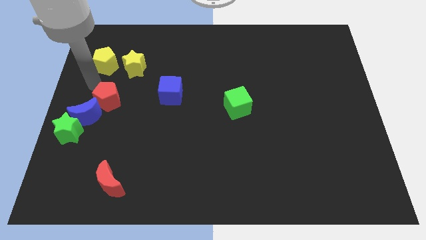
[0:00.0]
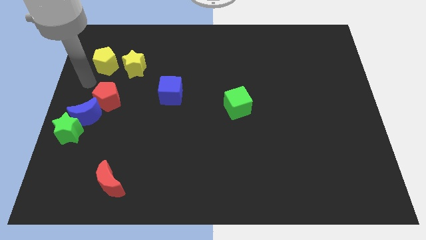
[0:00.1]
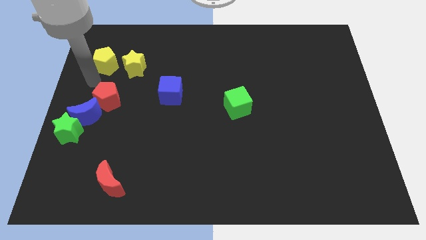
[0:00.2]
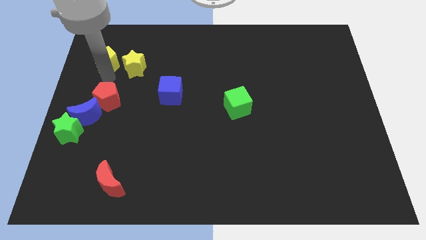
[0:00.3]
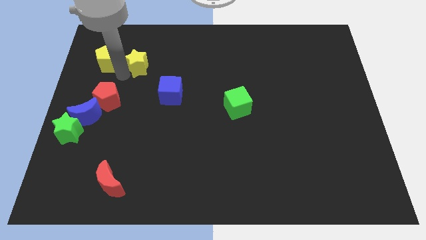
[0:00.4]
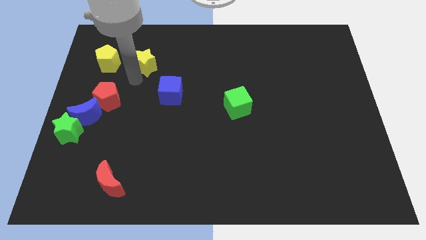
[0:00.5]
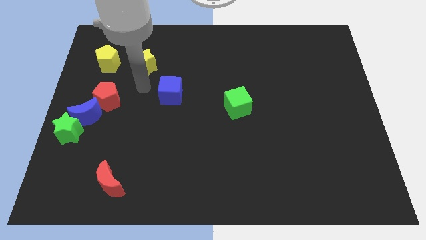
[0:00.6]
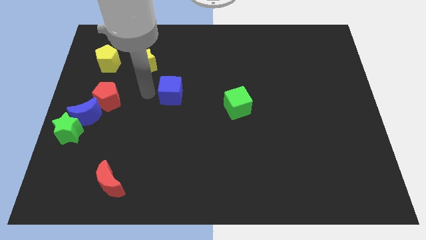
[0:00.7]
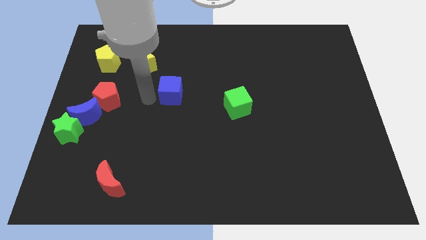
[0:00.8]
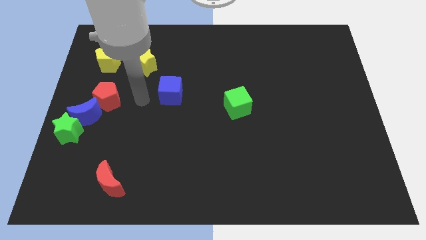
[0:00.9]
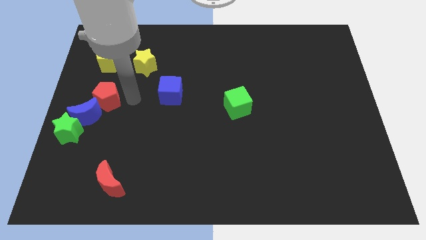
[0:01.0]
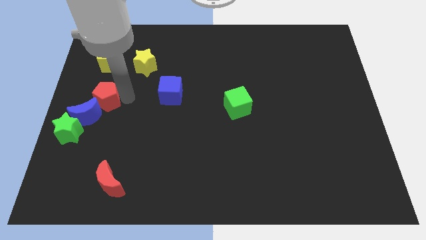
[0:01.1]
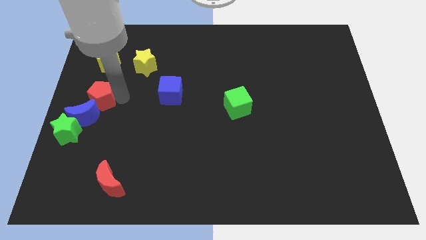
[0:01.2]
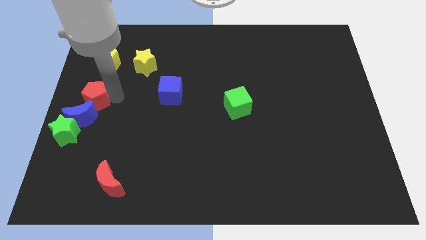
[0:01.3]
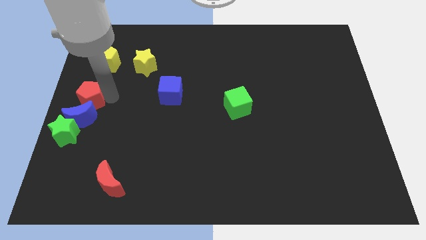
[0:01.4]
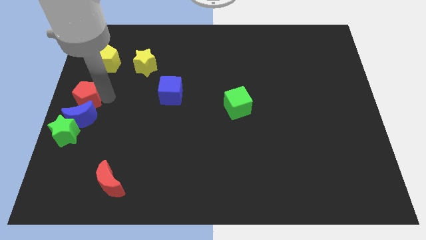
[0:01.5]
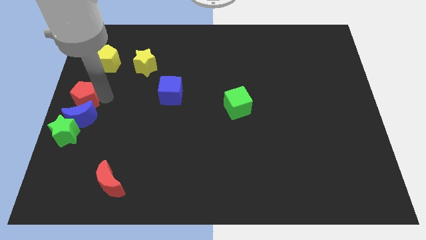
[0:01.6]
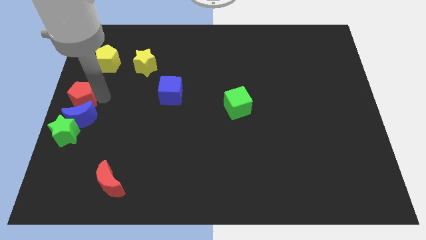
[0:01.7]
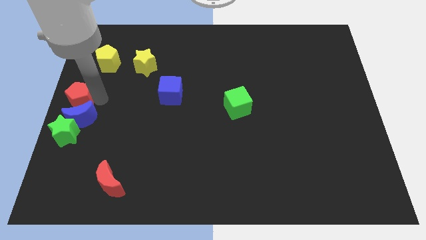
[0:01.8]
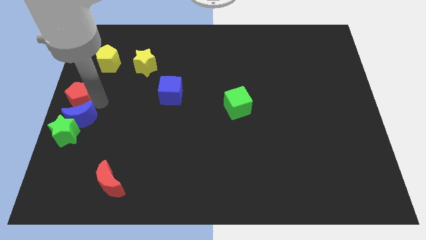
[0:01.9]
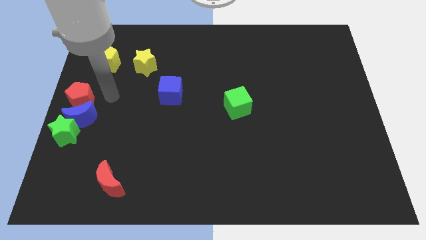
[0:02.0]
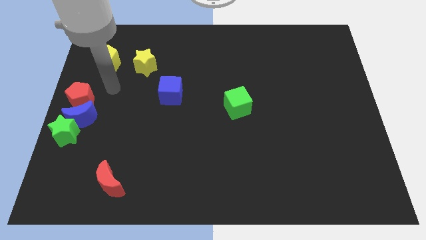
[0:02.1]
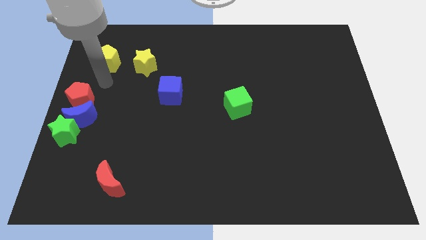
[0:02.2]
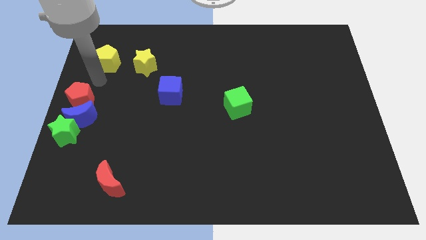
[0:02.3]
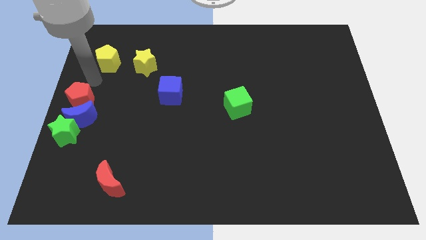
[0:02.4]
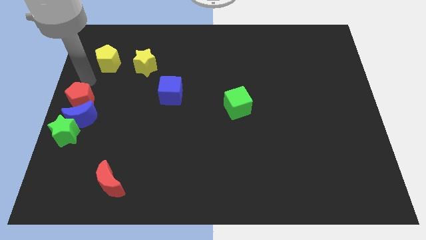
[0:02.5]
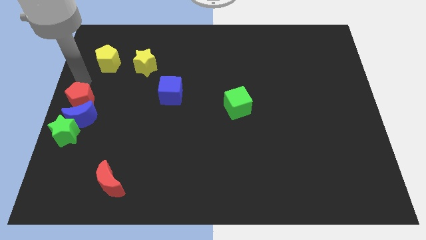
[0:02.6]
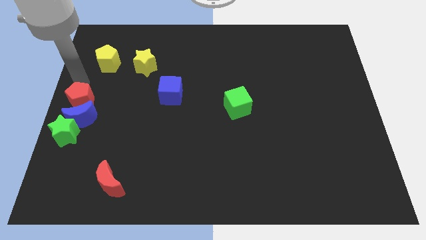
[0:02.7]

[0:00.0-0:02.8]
place red pentagon above blue moon

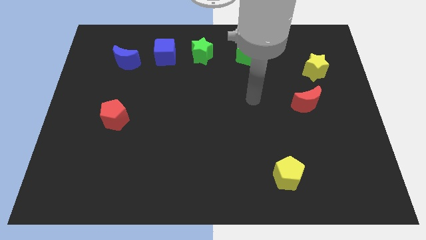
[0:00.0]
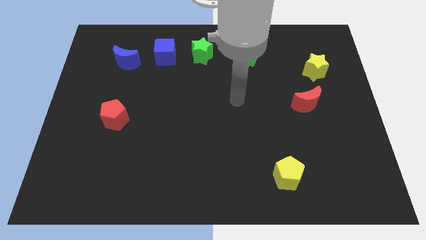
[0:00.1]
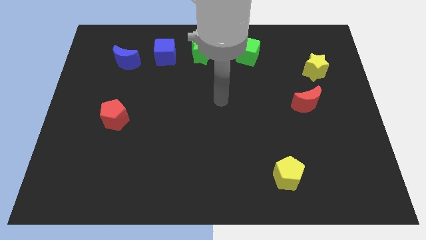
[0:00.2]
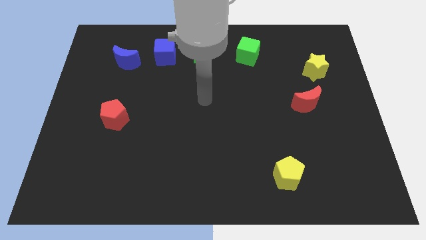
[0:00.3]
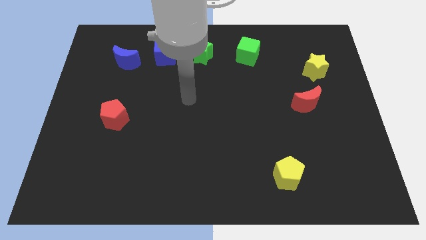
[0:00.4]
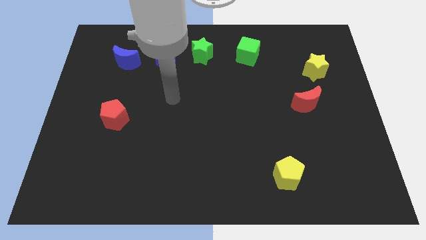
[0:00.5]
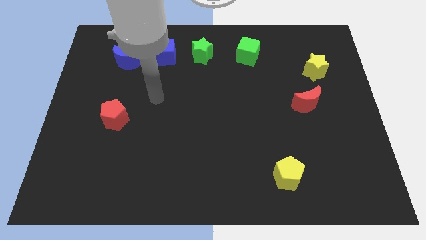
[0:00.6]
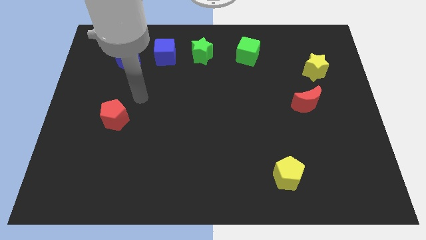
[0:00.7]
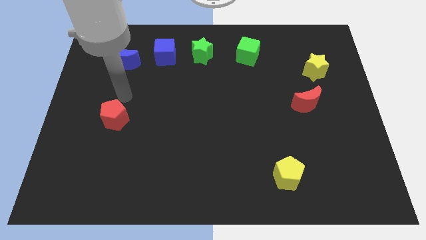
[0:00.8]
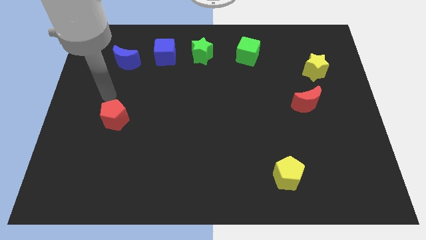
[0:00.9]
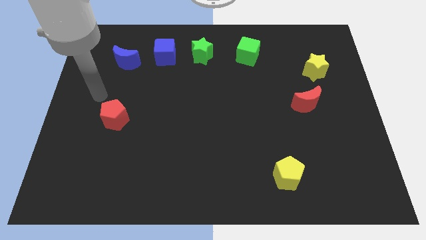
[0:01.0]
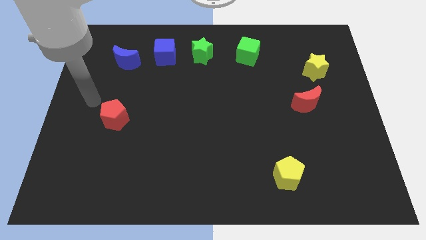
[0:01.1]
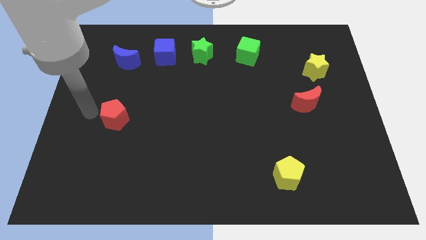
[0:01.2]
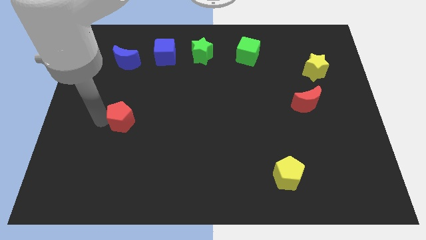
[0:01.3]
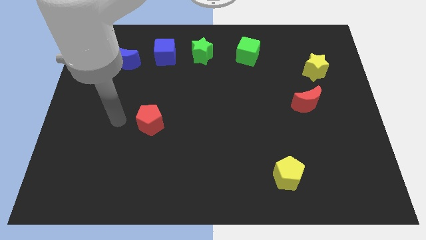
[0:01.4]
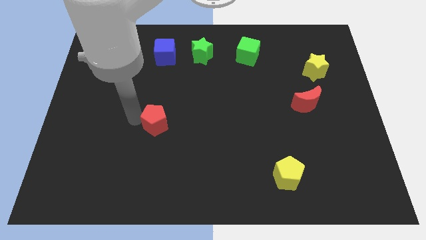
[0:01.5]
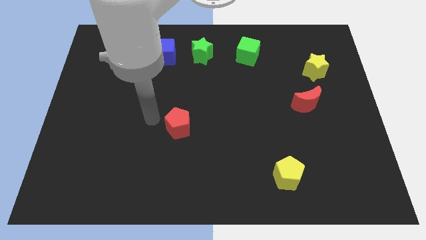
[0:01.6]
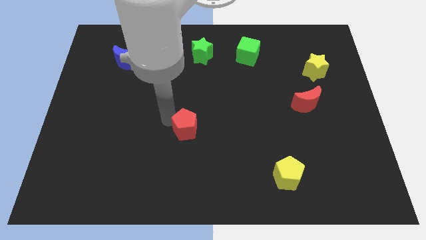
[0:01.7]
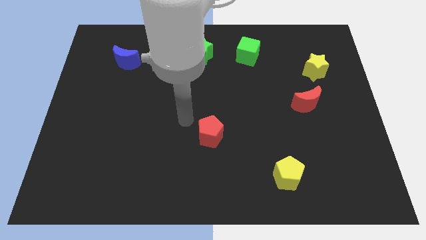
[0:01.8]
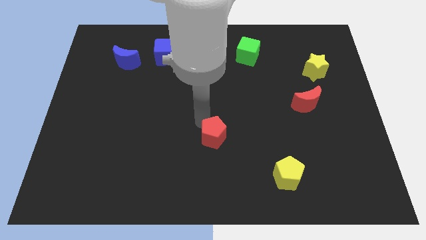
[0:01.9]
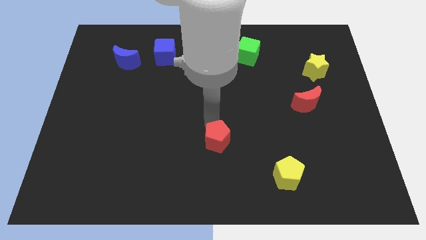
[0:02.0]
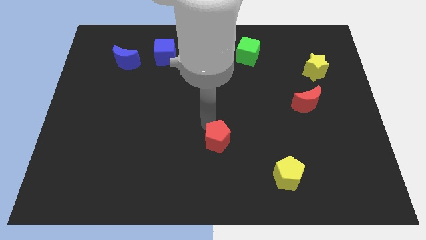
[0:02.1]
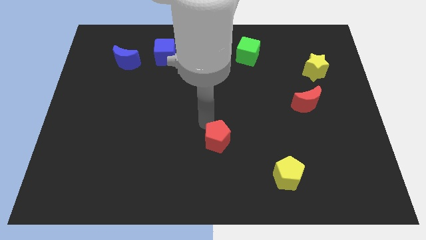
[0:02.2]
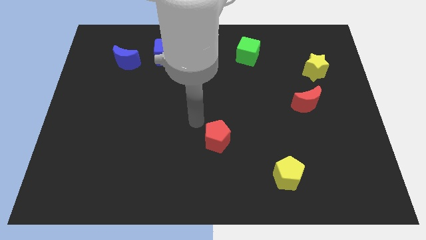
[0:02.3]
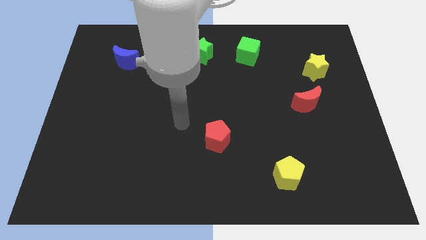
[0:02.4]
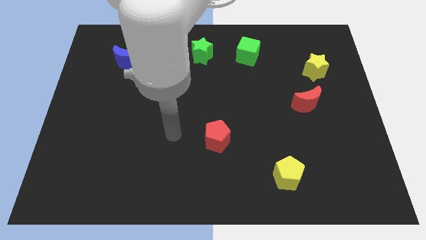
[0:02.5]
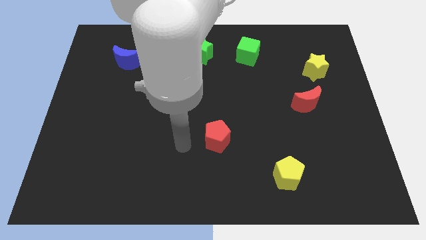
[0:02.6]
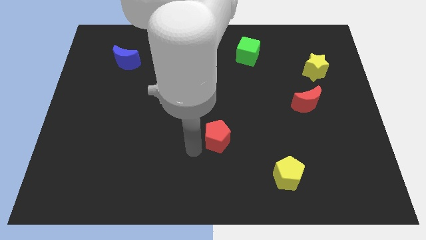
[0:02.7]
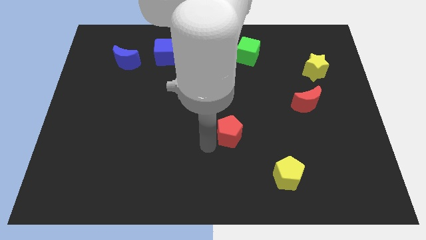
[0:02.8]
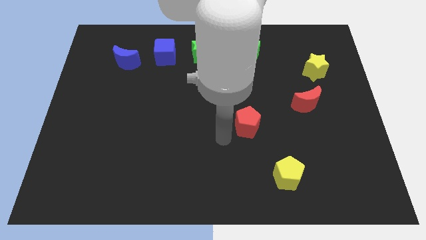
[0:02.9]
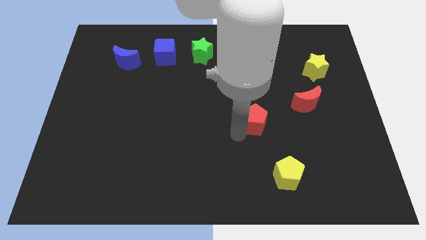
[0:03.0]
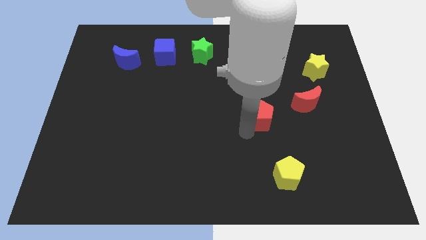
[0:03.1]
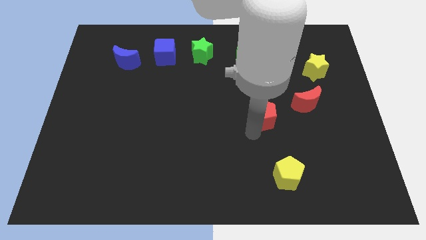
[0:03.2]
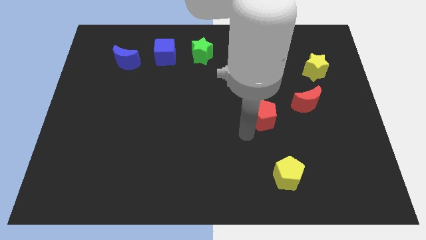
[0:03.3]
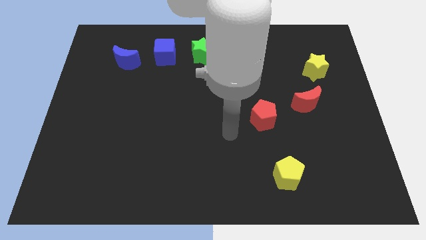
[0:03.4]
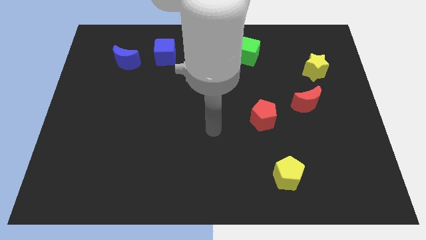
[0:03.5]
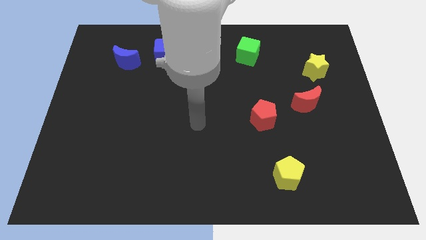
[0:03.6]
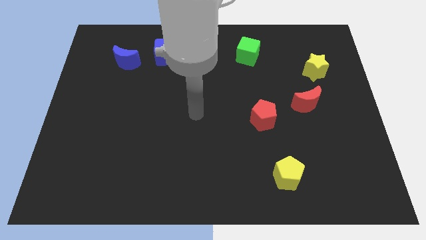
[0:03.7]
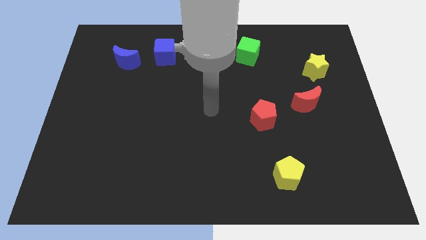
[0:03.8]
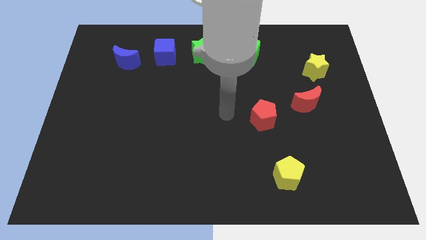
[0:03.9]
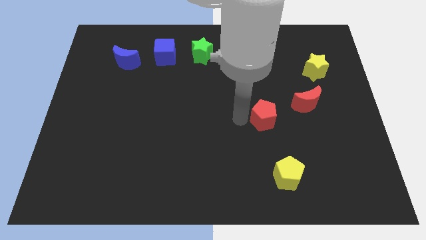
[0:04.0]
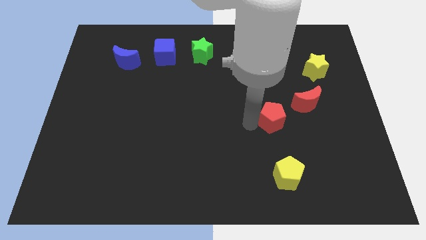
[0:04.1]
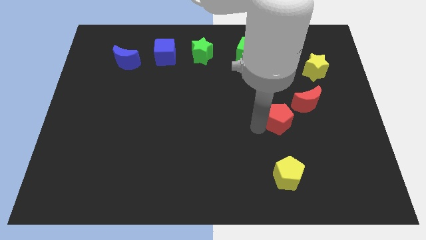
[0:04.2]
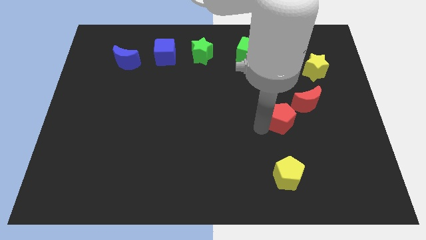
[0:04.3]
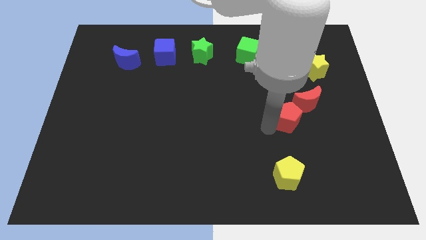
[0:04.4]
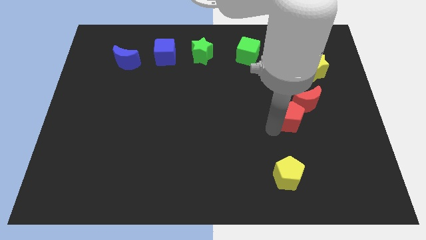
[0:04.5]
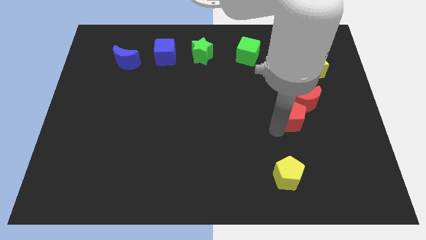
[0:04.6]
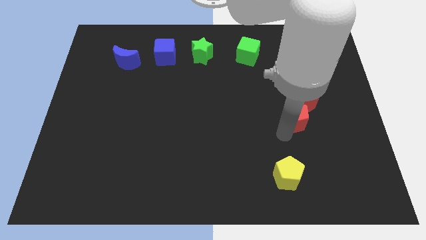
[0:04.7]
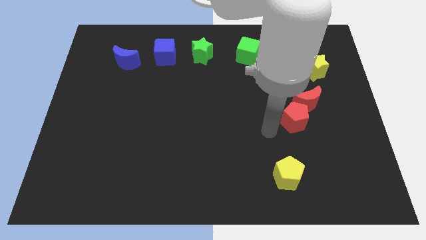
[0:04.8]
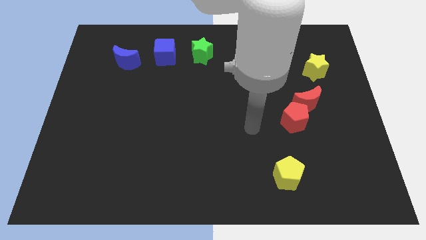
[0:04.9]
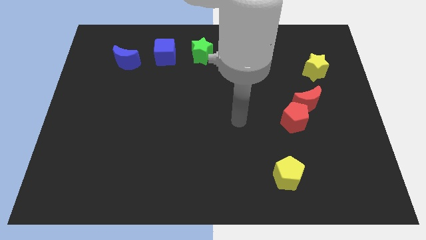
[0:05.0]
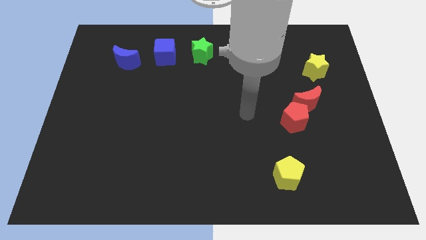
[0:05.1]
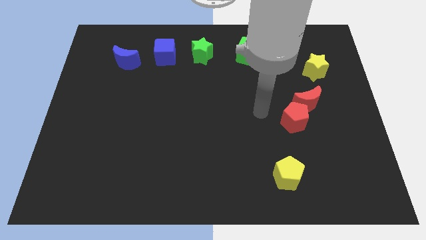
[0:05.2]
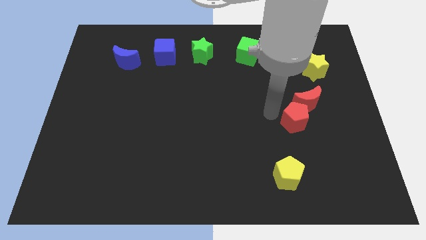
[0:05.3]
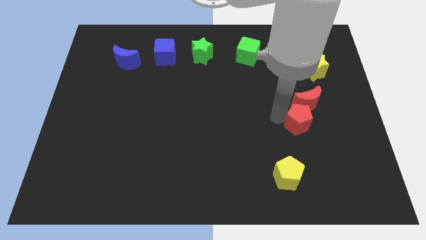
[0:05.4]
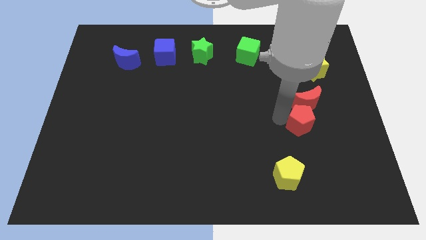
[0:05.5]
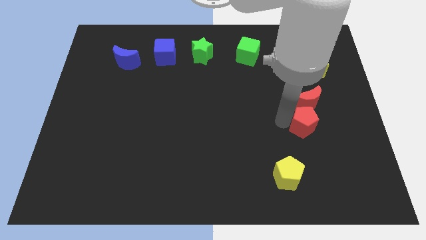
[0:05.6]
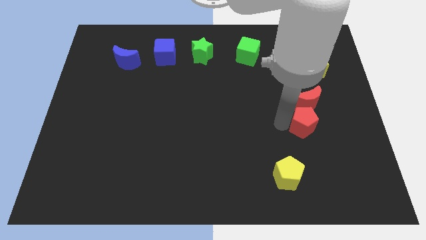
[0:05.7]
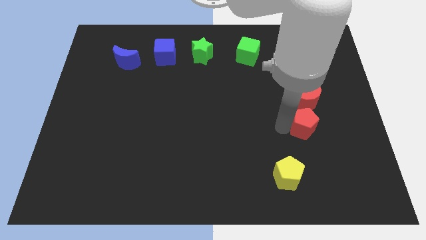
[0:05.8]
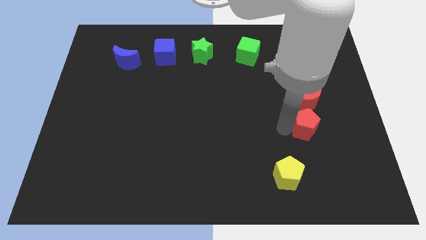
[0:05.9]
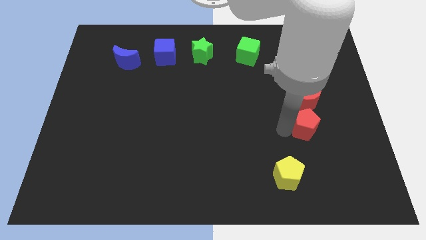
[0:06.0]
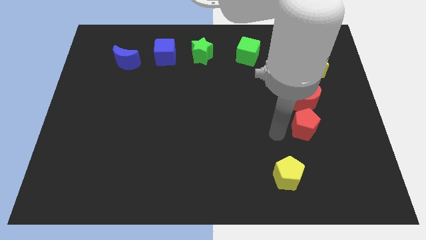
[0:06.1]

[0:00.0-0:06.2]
place red pentagon to the bottom of red moon
